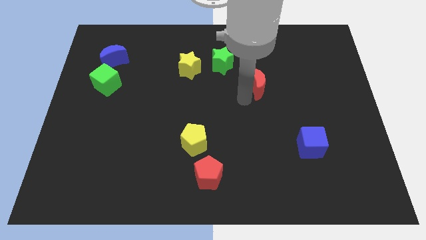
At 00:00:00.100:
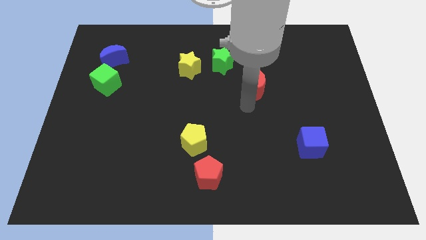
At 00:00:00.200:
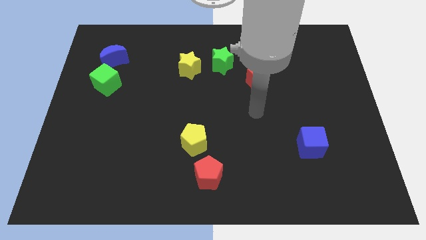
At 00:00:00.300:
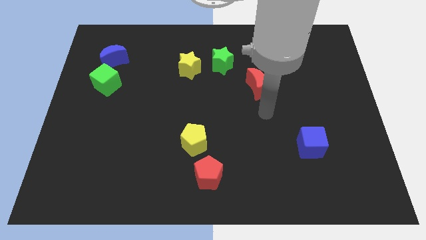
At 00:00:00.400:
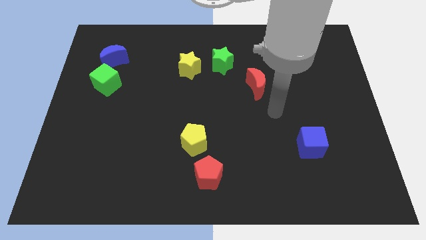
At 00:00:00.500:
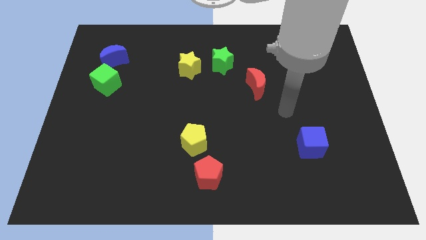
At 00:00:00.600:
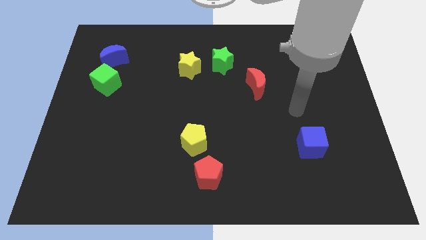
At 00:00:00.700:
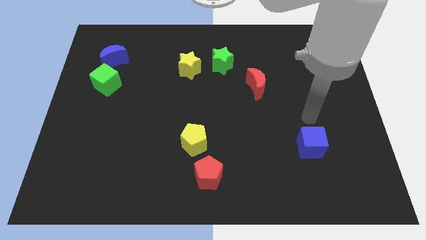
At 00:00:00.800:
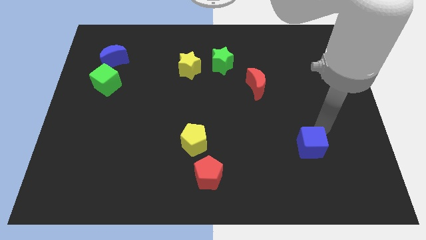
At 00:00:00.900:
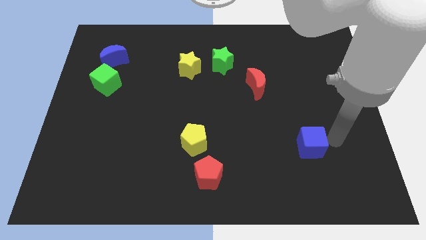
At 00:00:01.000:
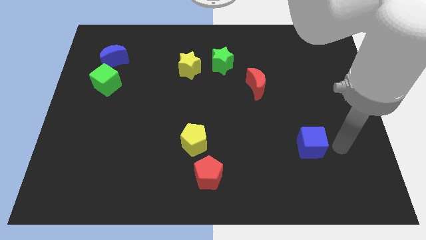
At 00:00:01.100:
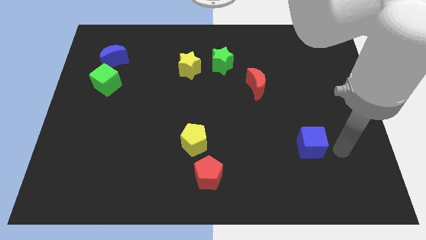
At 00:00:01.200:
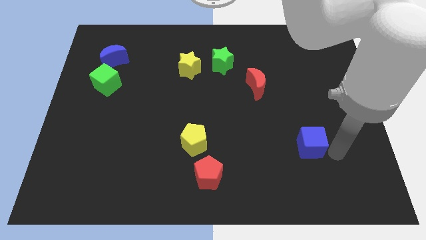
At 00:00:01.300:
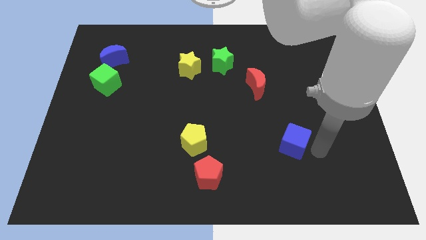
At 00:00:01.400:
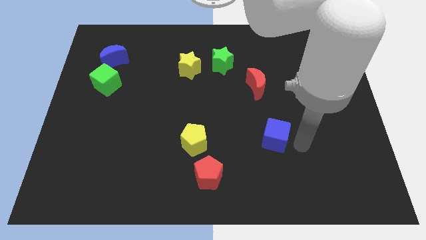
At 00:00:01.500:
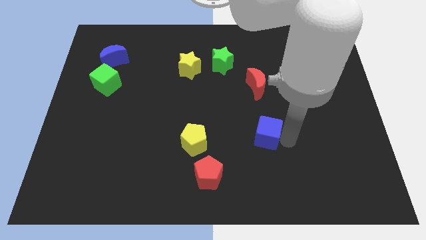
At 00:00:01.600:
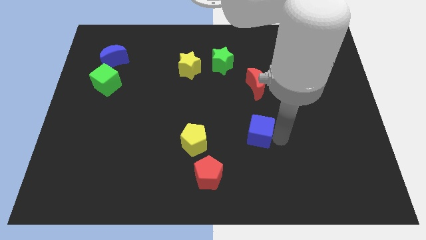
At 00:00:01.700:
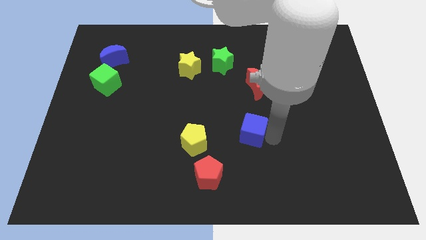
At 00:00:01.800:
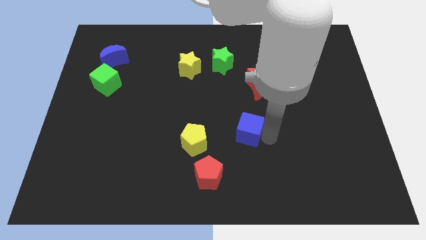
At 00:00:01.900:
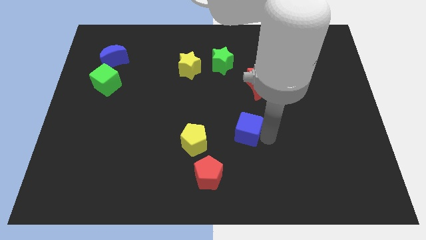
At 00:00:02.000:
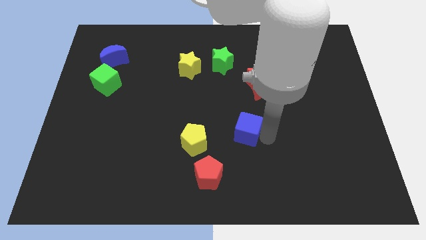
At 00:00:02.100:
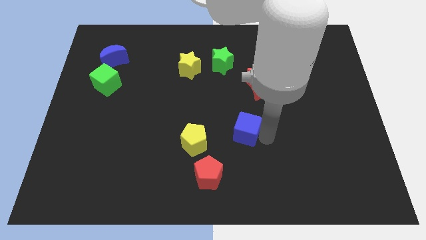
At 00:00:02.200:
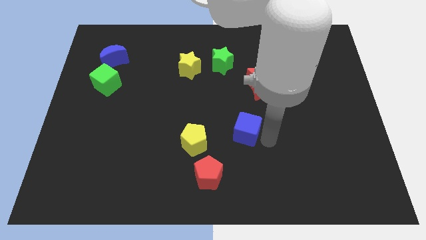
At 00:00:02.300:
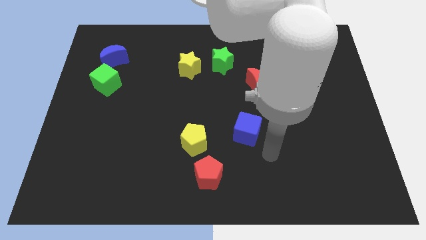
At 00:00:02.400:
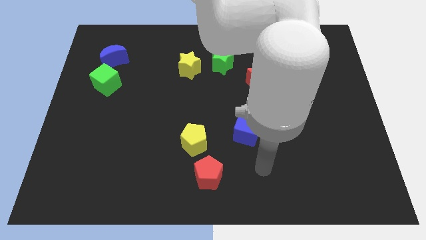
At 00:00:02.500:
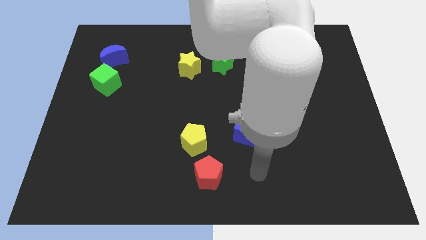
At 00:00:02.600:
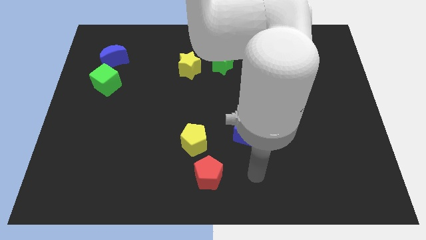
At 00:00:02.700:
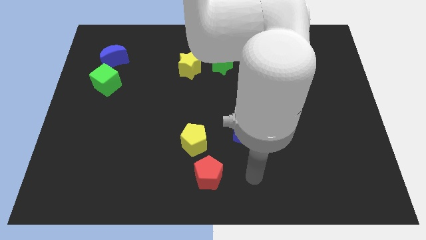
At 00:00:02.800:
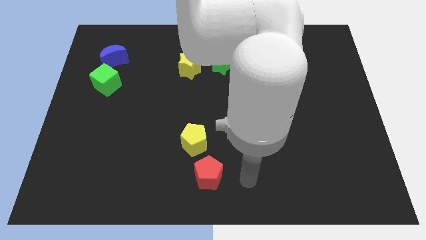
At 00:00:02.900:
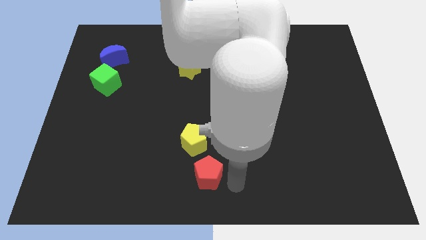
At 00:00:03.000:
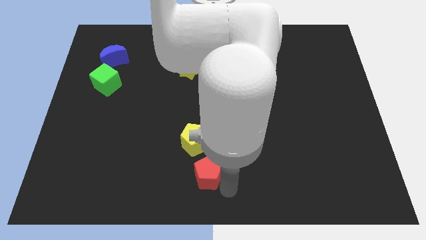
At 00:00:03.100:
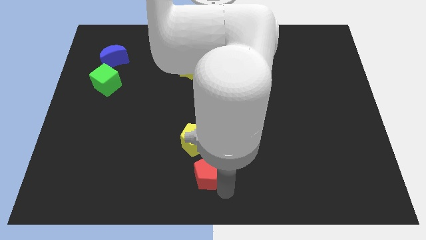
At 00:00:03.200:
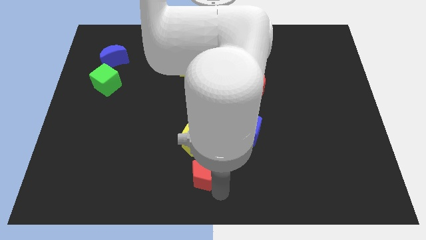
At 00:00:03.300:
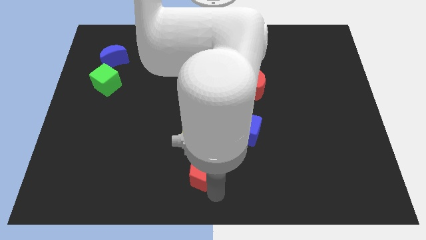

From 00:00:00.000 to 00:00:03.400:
push the blue cube towards the center of the board

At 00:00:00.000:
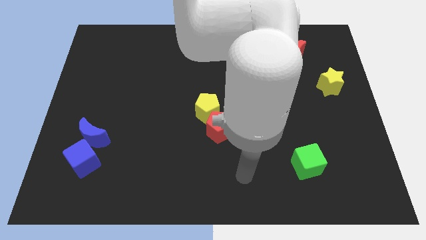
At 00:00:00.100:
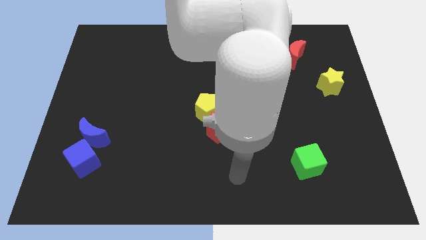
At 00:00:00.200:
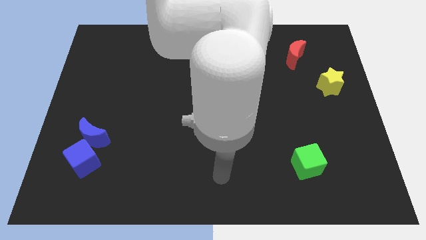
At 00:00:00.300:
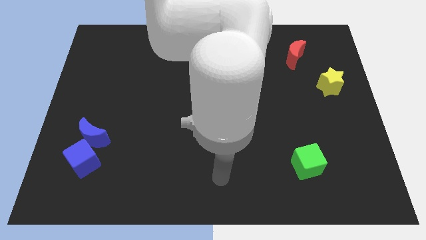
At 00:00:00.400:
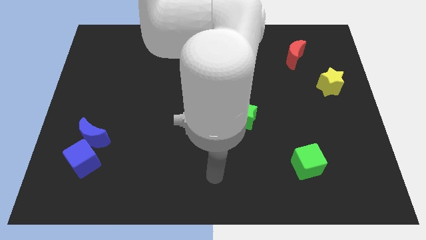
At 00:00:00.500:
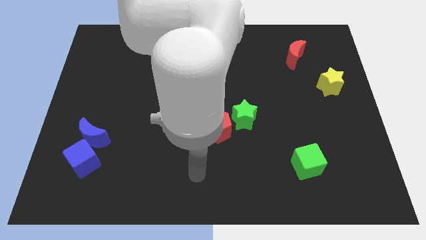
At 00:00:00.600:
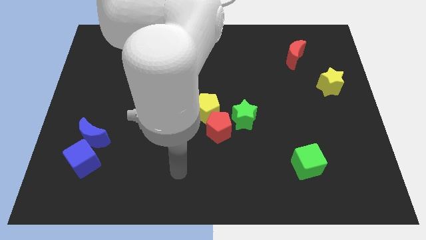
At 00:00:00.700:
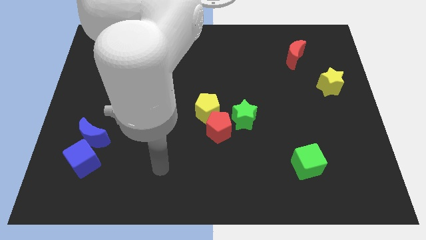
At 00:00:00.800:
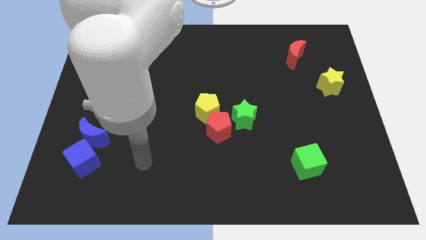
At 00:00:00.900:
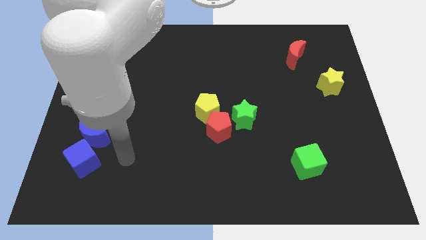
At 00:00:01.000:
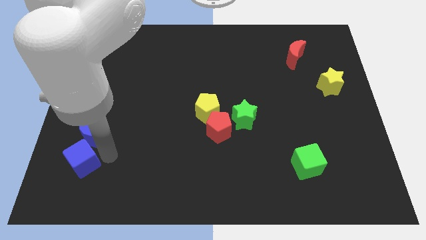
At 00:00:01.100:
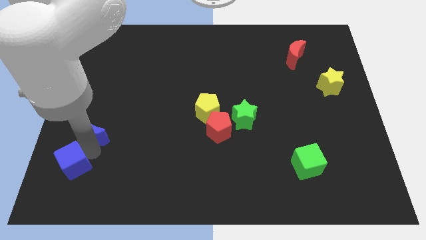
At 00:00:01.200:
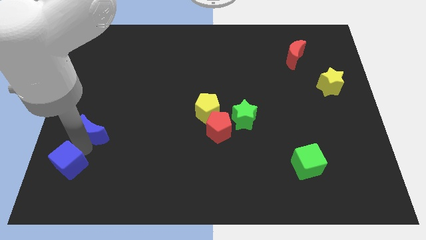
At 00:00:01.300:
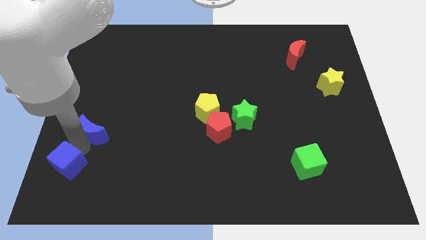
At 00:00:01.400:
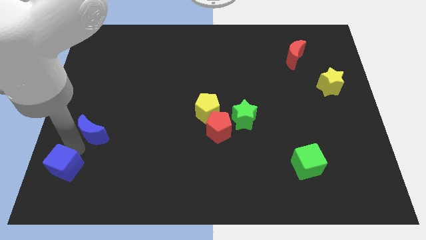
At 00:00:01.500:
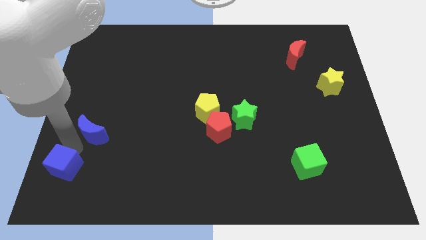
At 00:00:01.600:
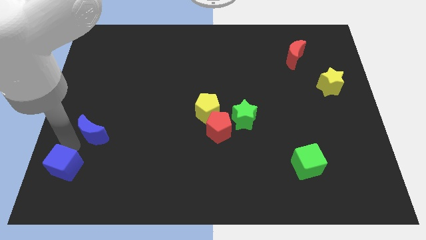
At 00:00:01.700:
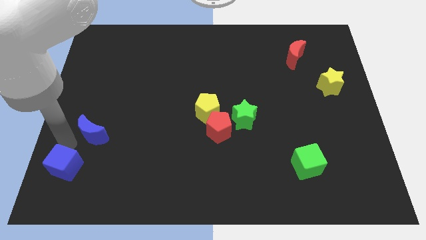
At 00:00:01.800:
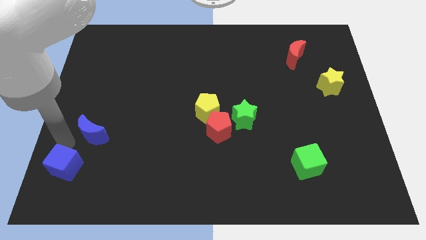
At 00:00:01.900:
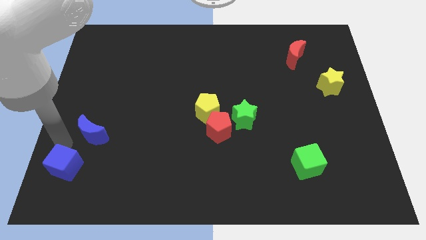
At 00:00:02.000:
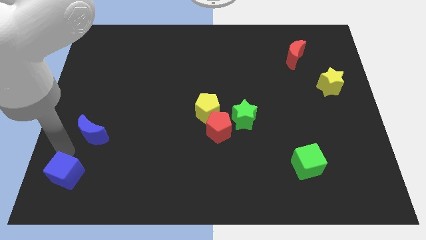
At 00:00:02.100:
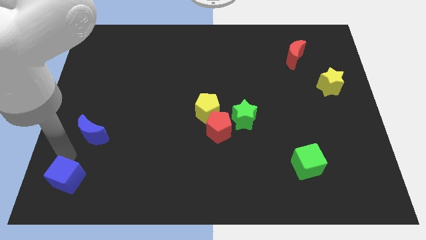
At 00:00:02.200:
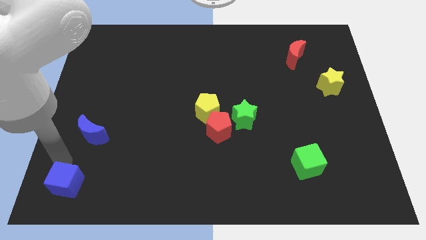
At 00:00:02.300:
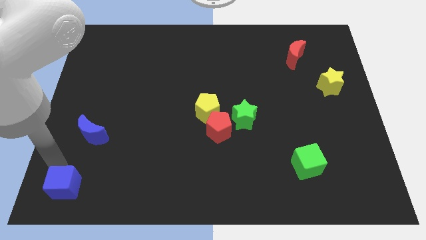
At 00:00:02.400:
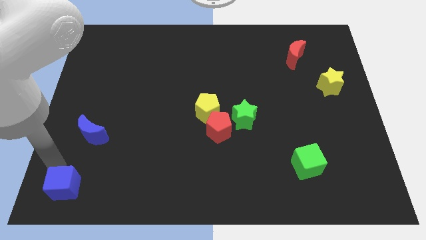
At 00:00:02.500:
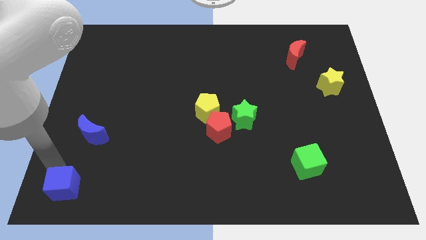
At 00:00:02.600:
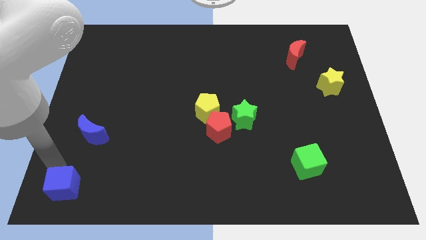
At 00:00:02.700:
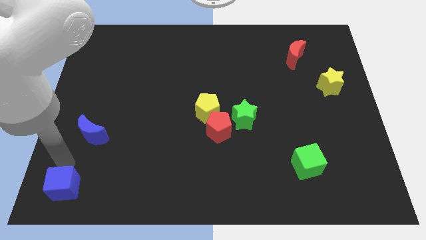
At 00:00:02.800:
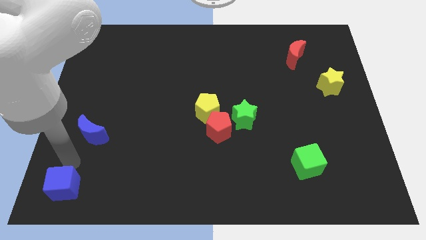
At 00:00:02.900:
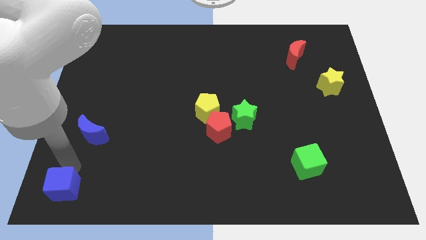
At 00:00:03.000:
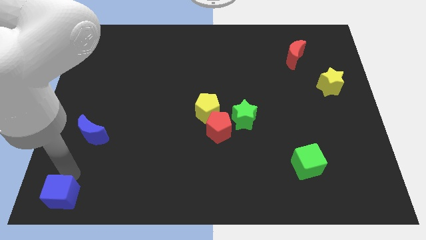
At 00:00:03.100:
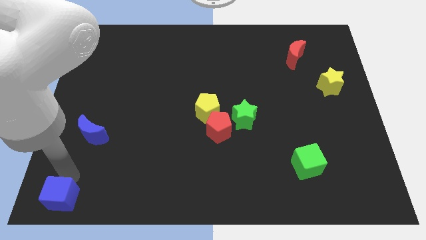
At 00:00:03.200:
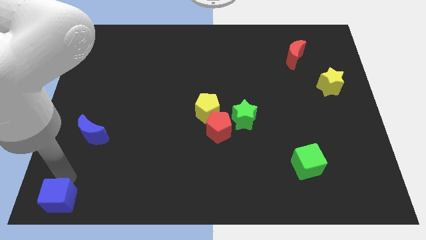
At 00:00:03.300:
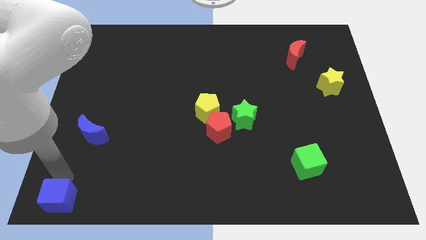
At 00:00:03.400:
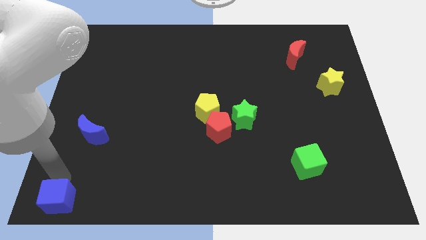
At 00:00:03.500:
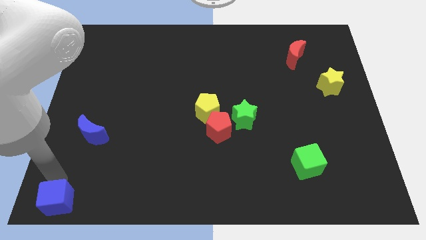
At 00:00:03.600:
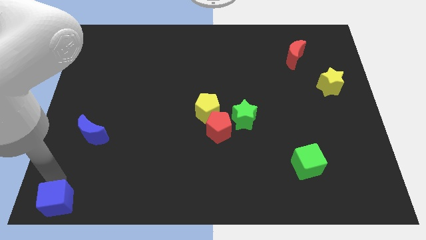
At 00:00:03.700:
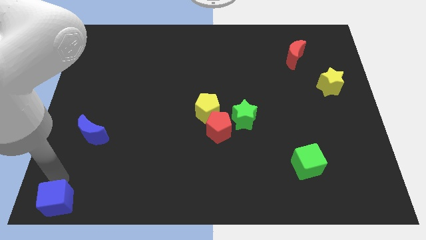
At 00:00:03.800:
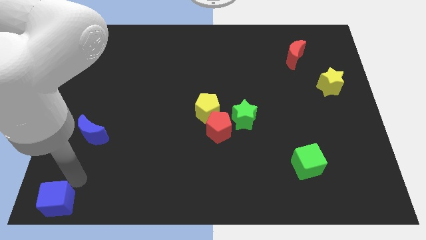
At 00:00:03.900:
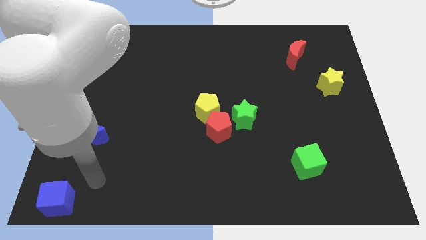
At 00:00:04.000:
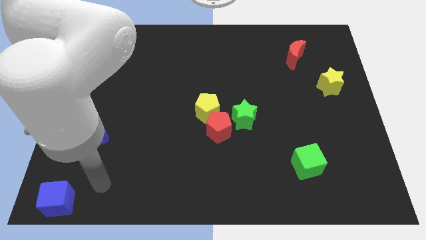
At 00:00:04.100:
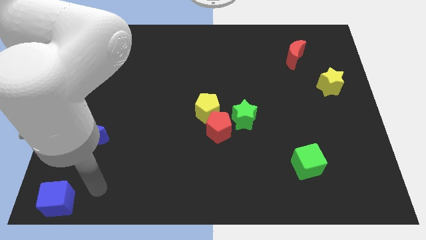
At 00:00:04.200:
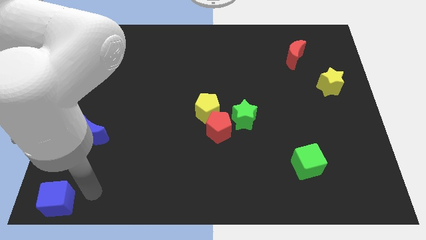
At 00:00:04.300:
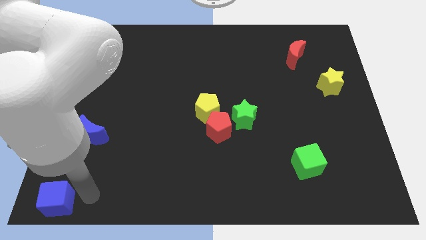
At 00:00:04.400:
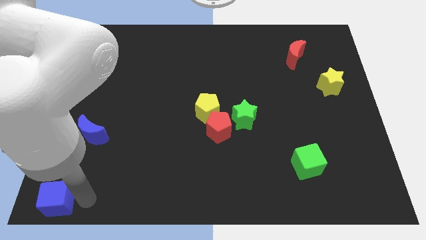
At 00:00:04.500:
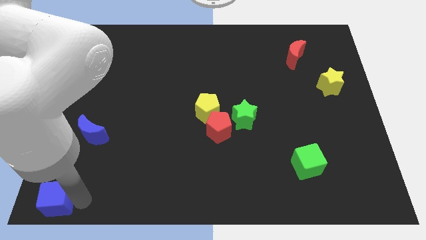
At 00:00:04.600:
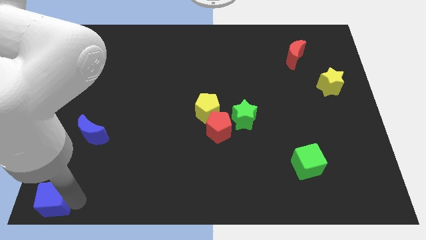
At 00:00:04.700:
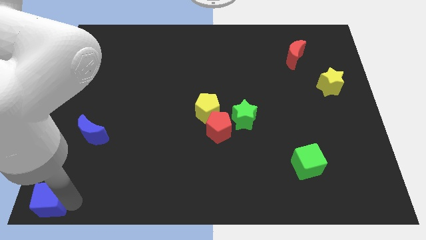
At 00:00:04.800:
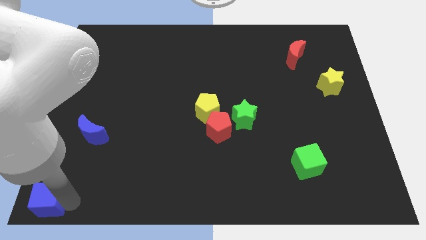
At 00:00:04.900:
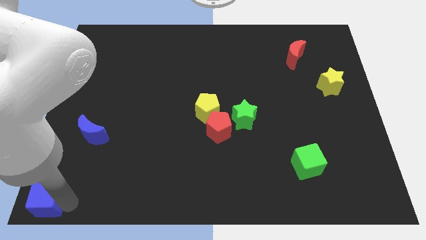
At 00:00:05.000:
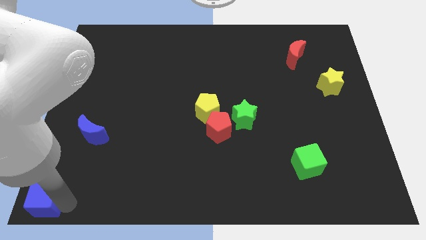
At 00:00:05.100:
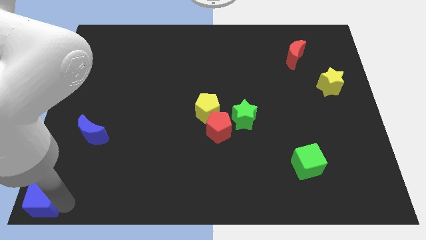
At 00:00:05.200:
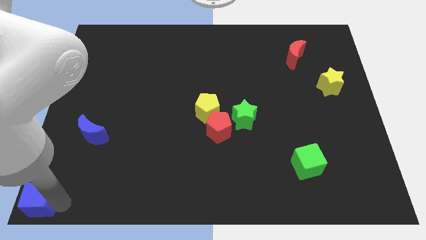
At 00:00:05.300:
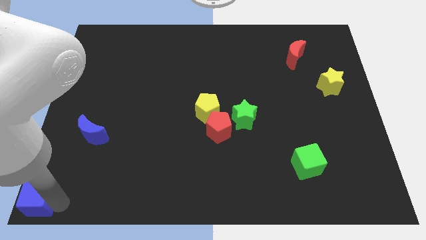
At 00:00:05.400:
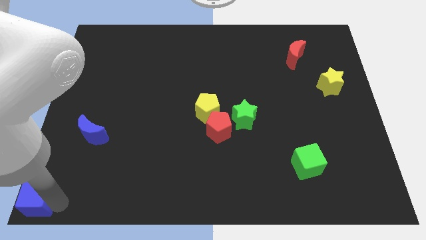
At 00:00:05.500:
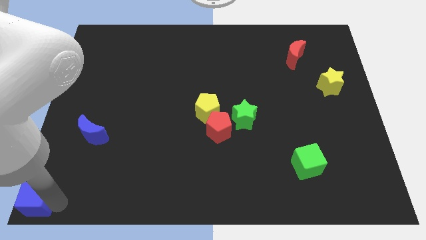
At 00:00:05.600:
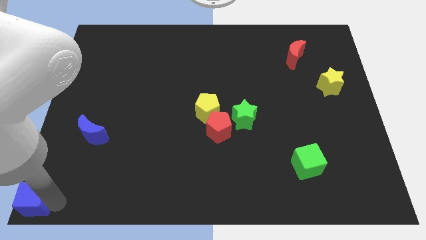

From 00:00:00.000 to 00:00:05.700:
push the blue cube to the bottom left
